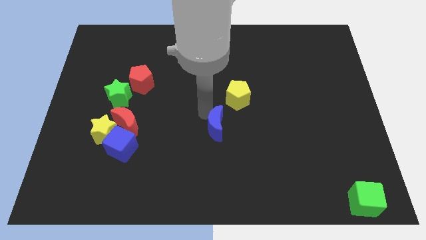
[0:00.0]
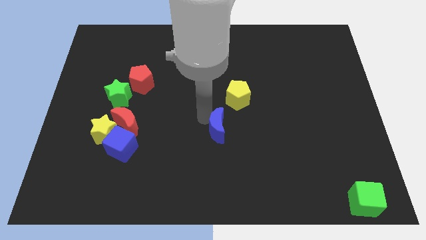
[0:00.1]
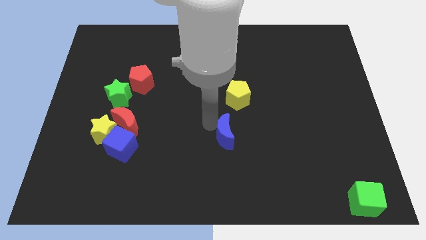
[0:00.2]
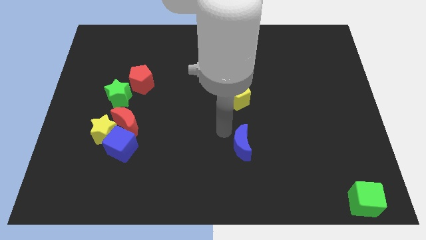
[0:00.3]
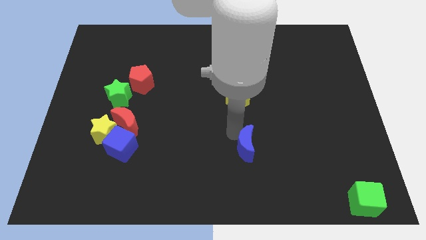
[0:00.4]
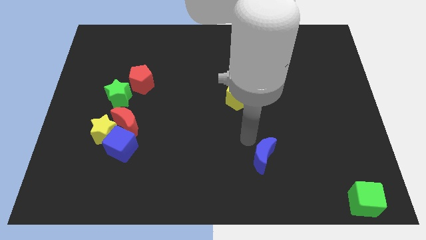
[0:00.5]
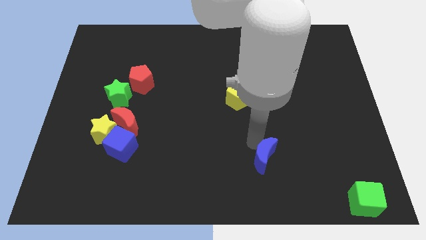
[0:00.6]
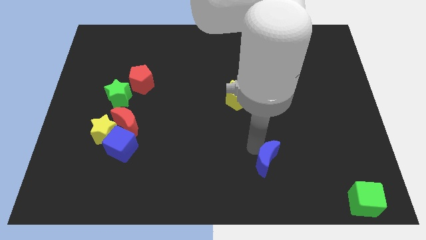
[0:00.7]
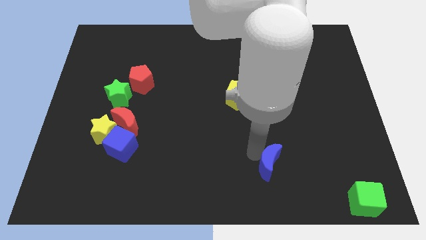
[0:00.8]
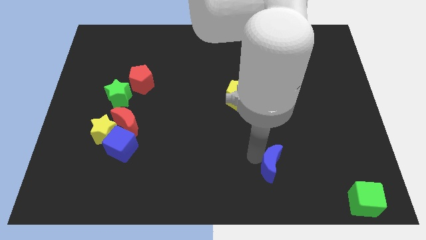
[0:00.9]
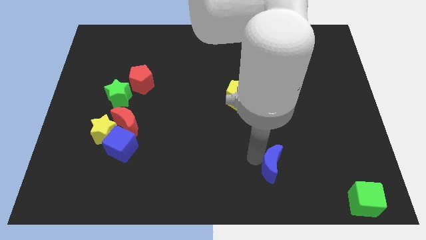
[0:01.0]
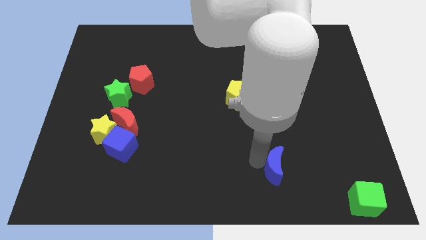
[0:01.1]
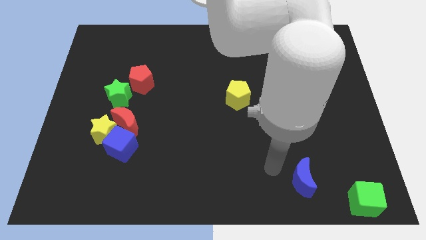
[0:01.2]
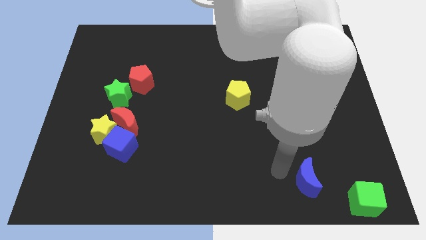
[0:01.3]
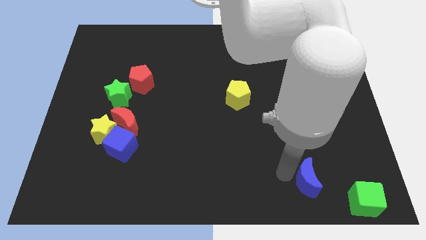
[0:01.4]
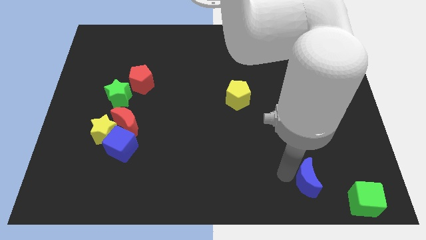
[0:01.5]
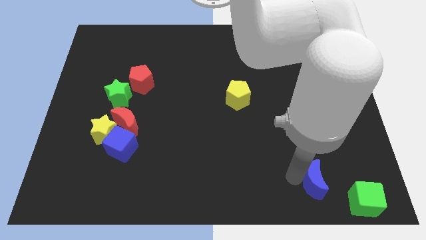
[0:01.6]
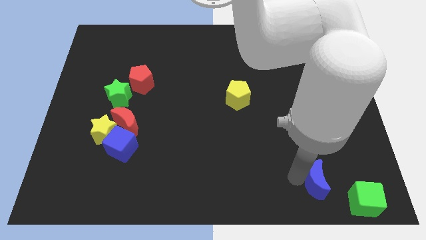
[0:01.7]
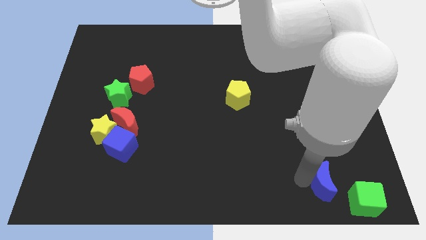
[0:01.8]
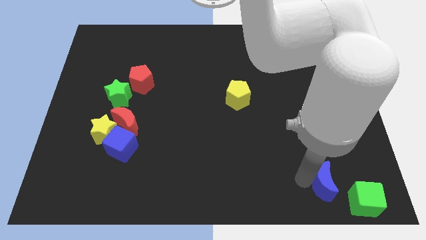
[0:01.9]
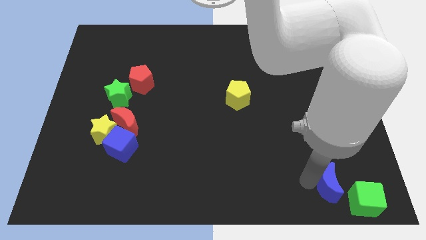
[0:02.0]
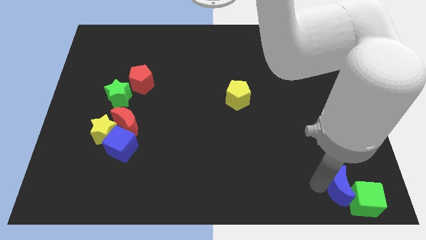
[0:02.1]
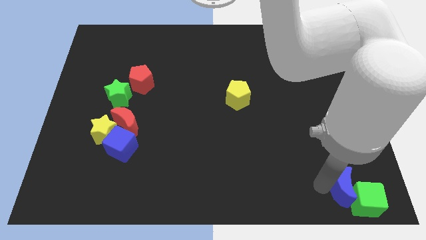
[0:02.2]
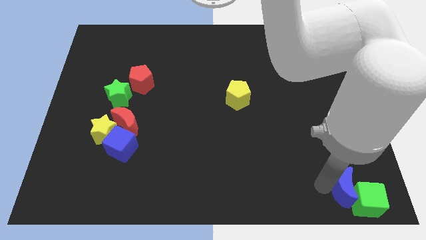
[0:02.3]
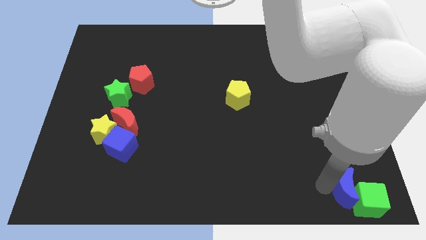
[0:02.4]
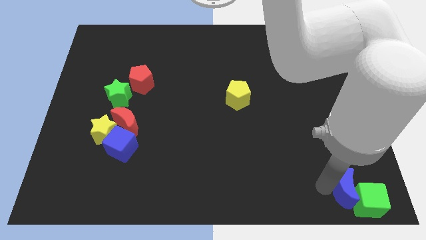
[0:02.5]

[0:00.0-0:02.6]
push the blue crescent to the left of the green cube

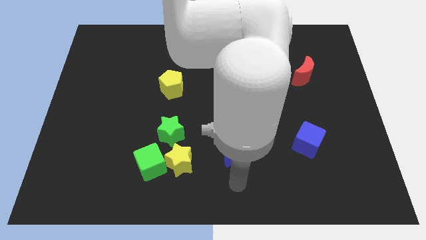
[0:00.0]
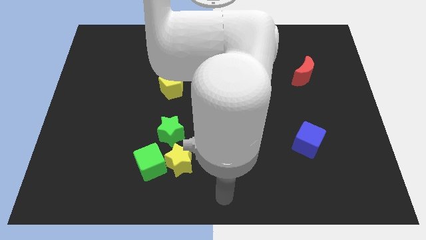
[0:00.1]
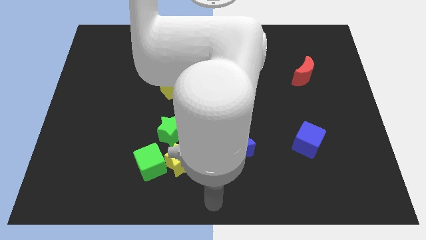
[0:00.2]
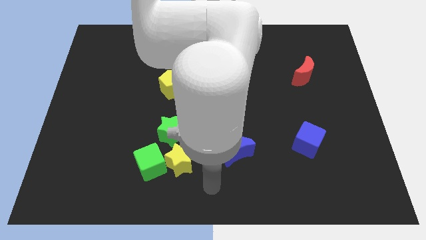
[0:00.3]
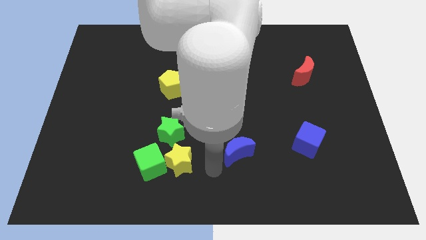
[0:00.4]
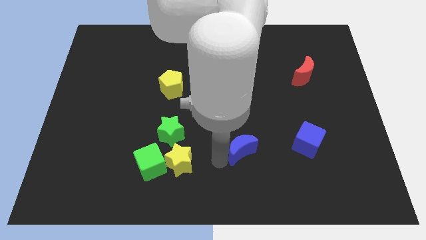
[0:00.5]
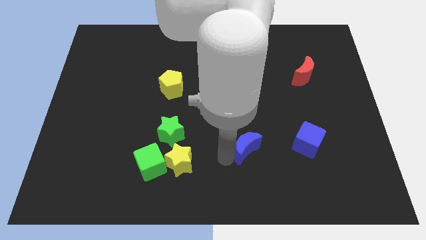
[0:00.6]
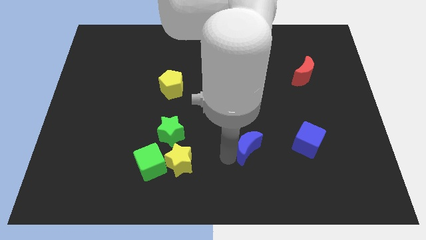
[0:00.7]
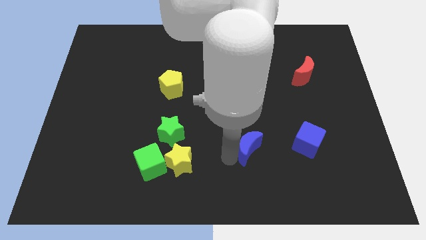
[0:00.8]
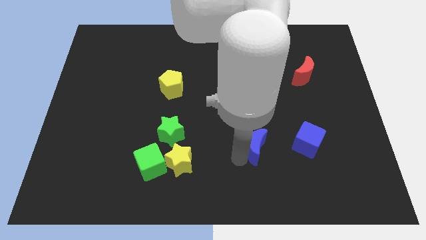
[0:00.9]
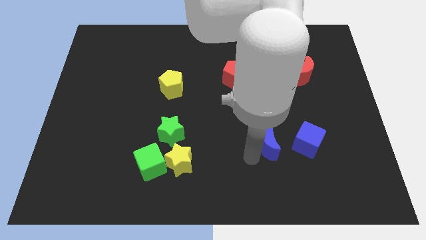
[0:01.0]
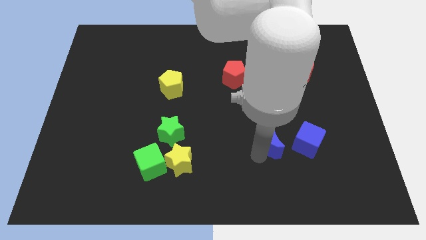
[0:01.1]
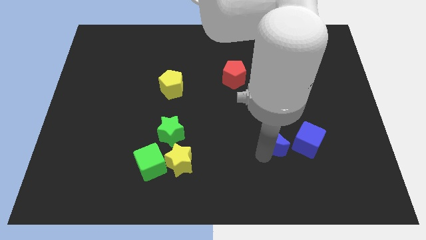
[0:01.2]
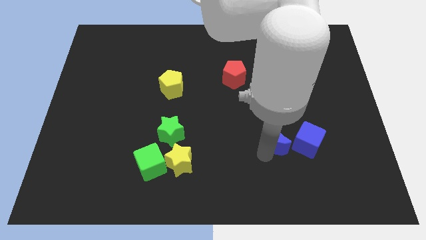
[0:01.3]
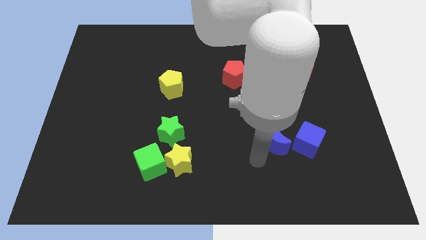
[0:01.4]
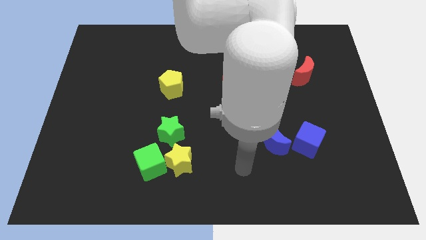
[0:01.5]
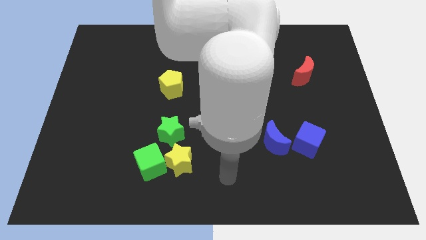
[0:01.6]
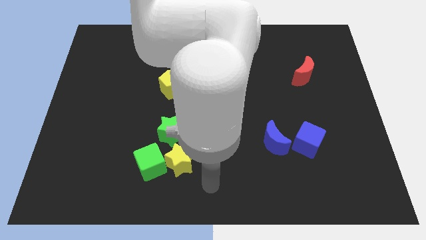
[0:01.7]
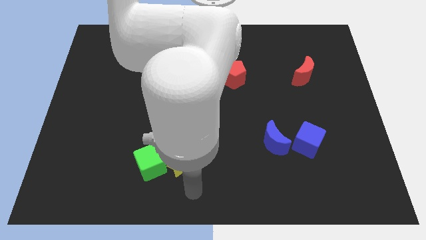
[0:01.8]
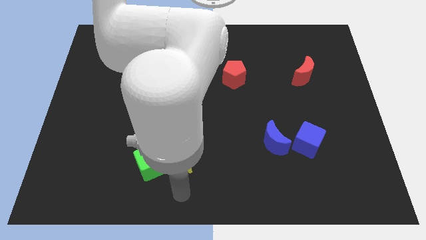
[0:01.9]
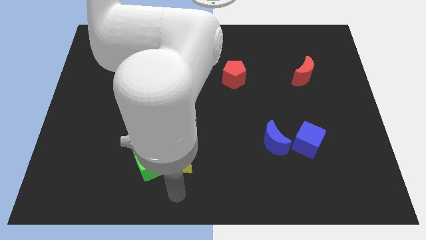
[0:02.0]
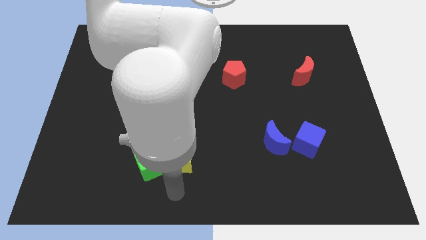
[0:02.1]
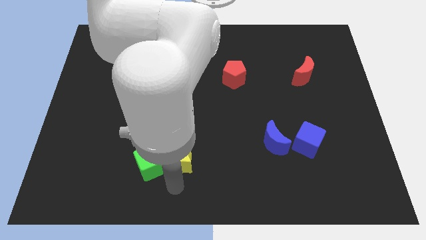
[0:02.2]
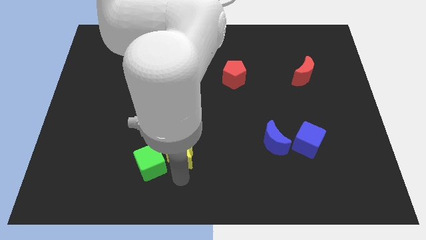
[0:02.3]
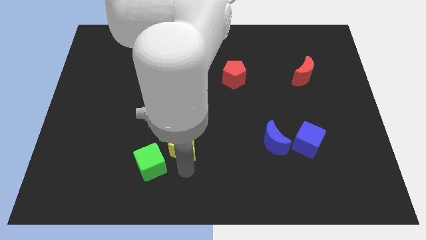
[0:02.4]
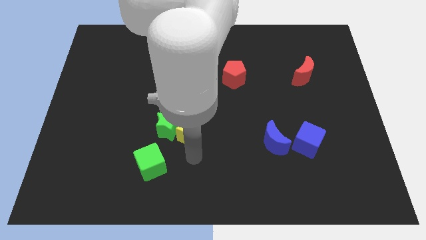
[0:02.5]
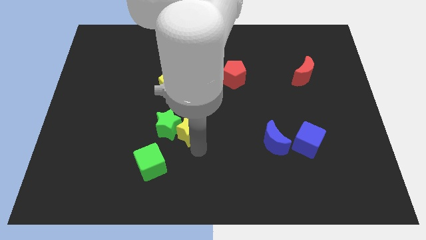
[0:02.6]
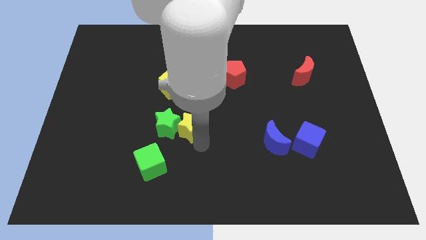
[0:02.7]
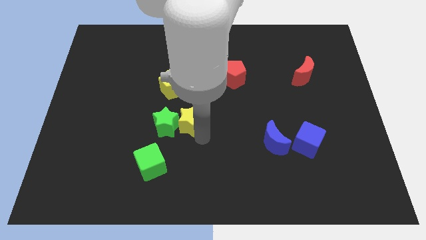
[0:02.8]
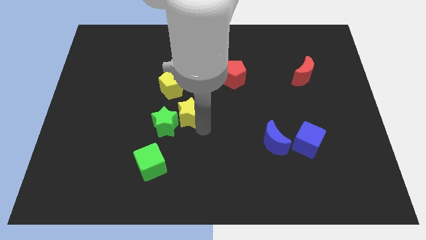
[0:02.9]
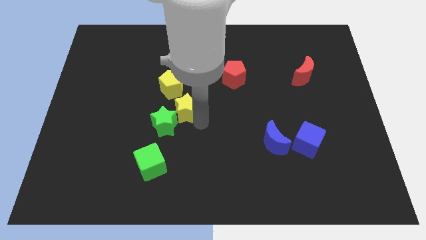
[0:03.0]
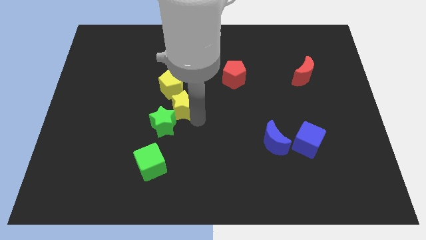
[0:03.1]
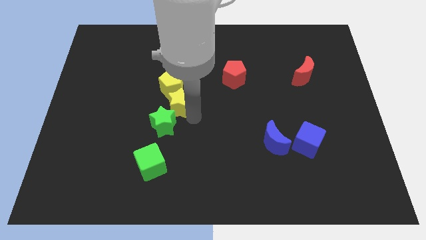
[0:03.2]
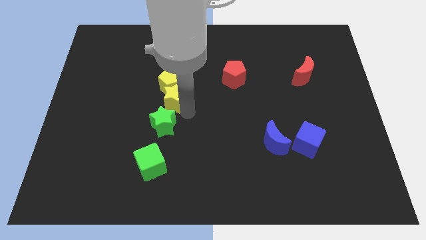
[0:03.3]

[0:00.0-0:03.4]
push yellow star below yellow pentagon

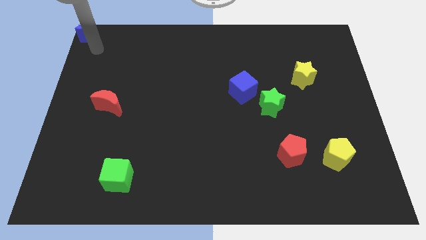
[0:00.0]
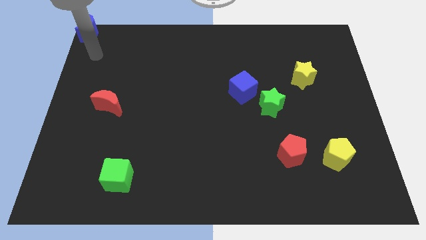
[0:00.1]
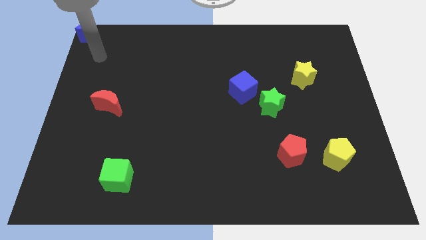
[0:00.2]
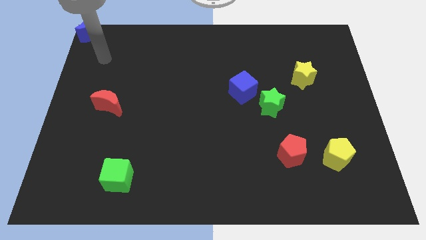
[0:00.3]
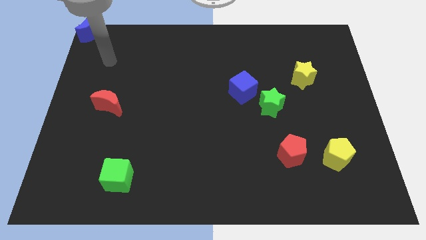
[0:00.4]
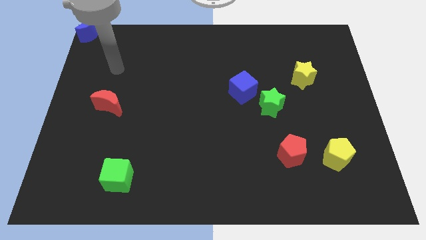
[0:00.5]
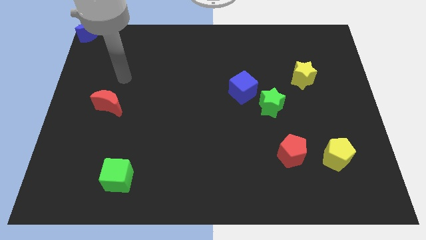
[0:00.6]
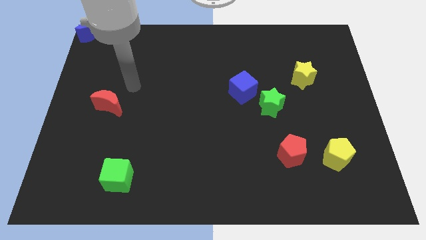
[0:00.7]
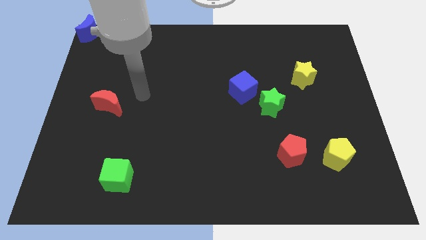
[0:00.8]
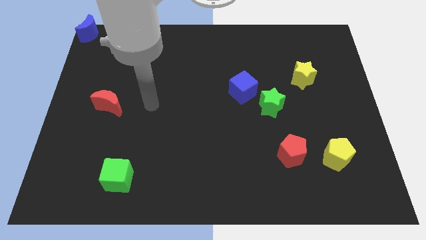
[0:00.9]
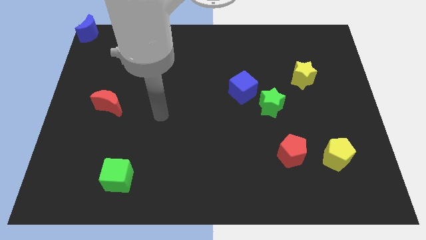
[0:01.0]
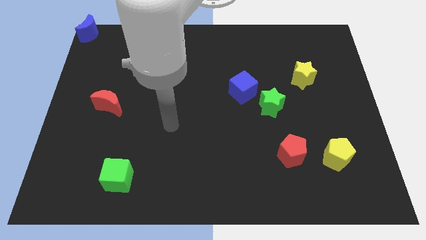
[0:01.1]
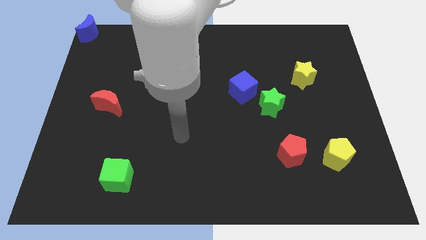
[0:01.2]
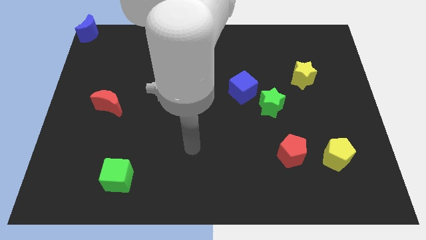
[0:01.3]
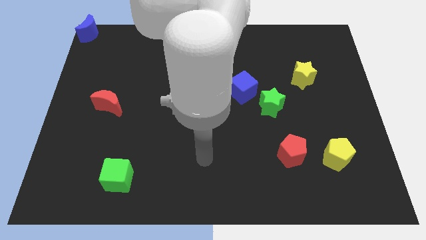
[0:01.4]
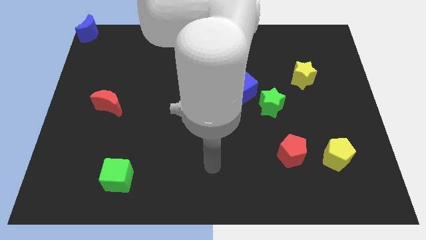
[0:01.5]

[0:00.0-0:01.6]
move your arm away from the blue moon

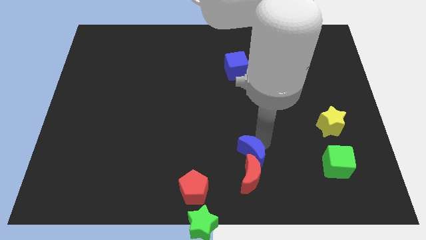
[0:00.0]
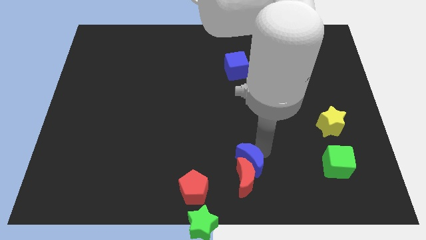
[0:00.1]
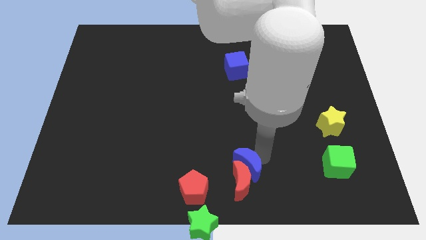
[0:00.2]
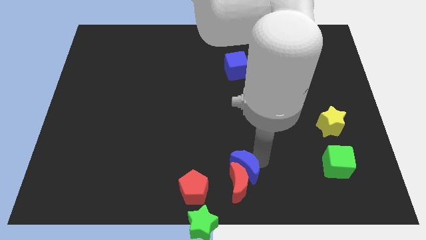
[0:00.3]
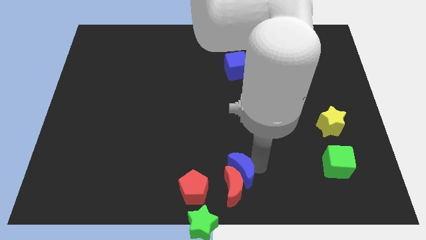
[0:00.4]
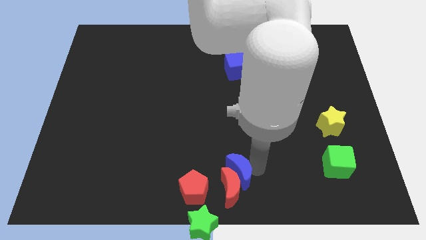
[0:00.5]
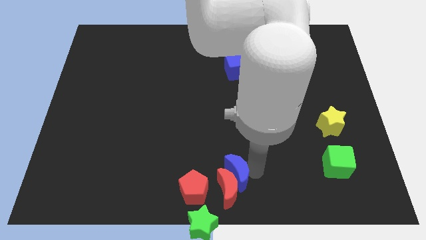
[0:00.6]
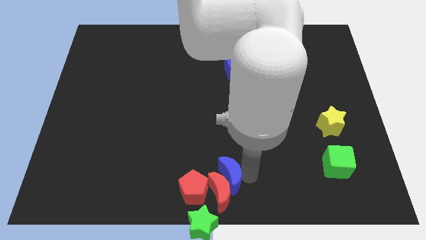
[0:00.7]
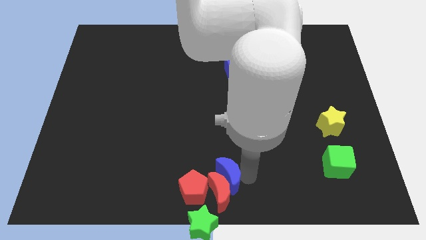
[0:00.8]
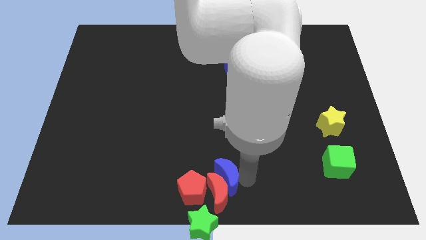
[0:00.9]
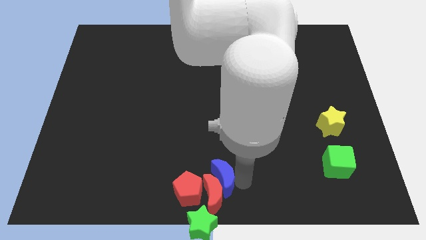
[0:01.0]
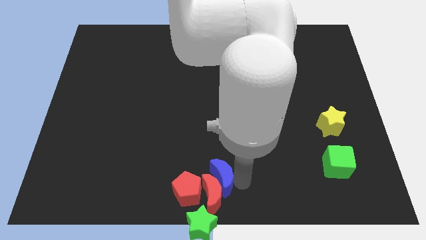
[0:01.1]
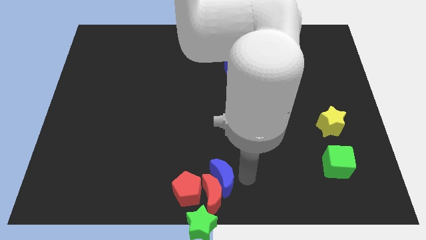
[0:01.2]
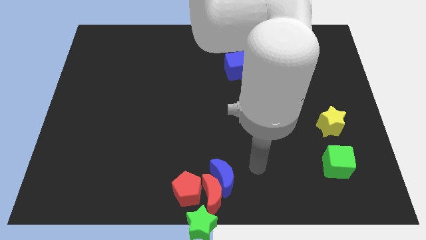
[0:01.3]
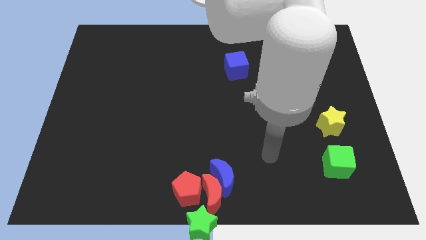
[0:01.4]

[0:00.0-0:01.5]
move the blue crescent to the center of the board
